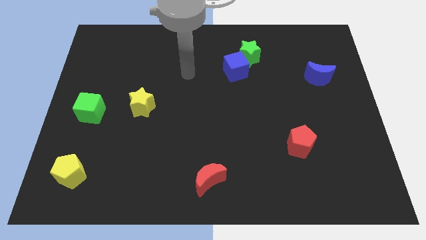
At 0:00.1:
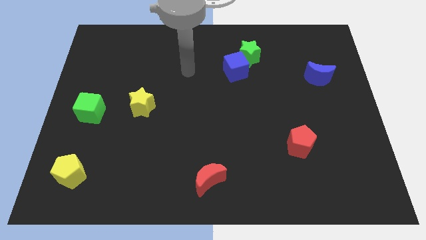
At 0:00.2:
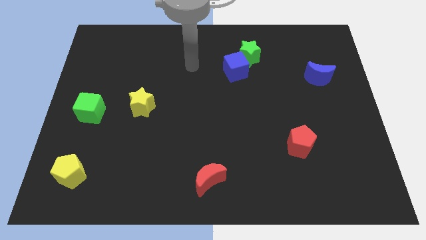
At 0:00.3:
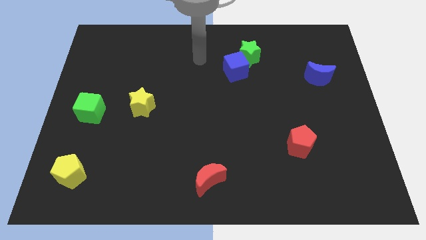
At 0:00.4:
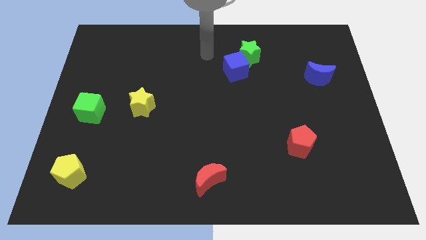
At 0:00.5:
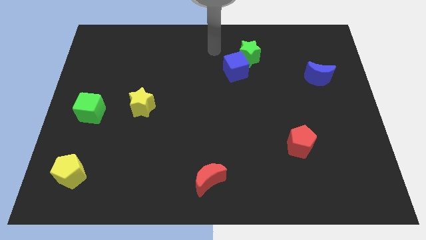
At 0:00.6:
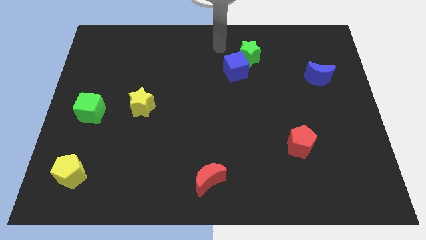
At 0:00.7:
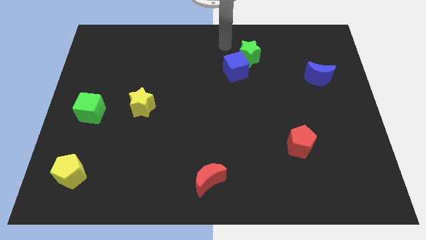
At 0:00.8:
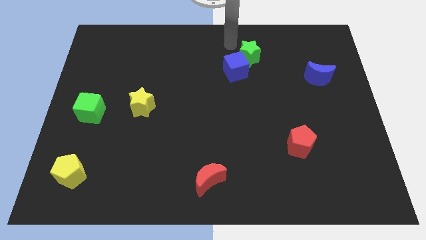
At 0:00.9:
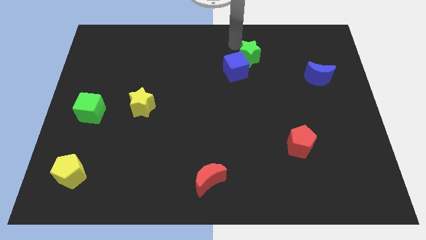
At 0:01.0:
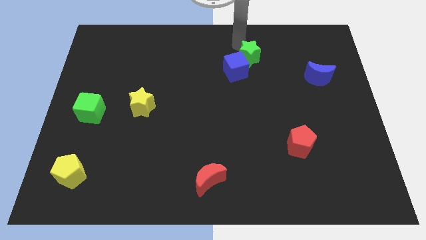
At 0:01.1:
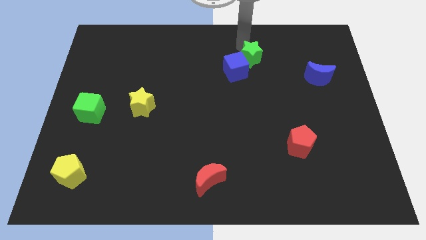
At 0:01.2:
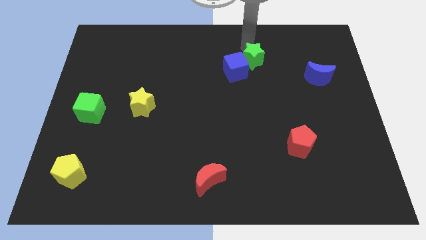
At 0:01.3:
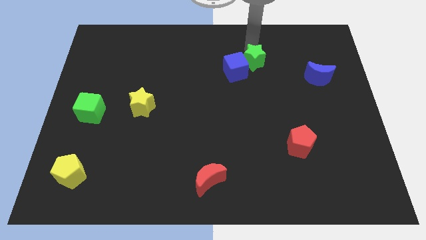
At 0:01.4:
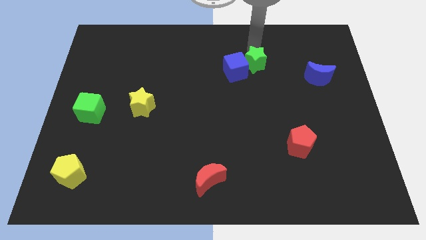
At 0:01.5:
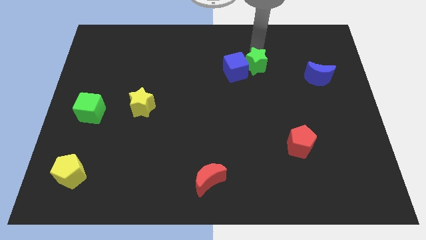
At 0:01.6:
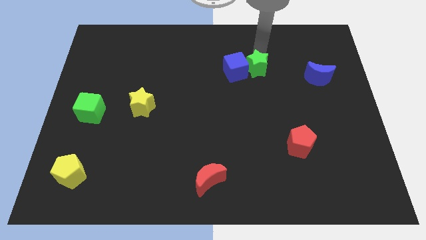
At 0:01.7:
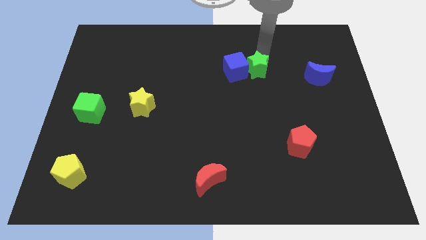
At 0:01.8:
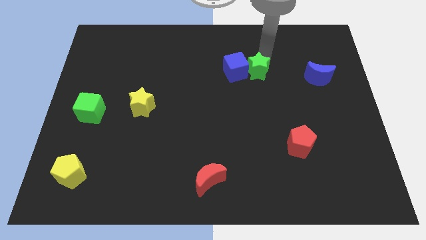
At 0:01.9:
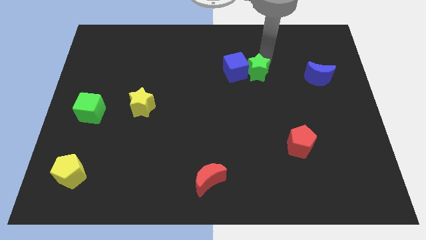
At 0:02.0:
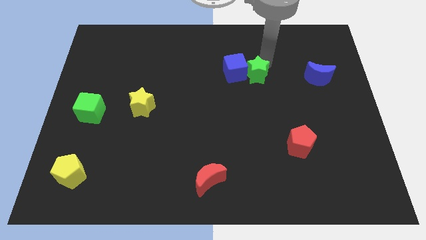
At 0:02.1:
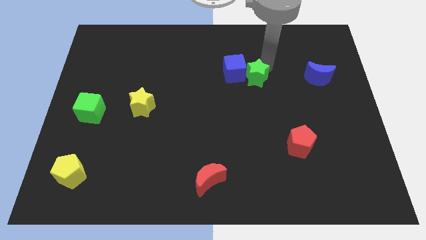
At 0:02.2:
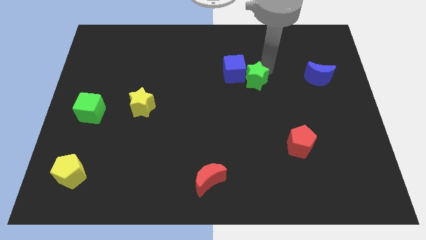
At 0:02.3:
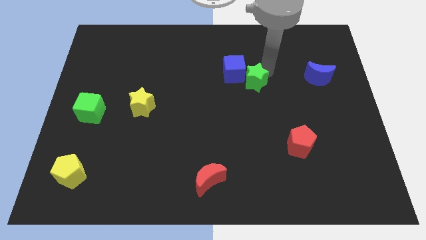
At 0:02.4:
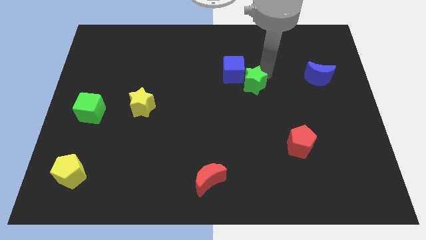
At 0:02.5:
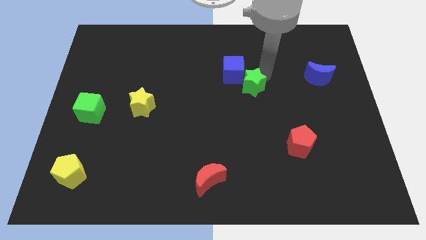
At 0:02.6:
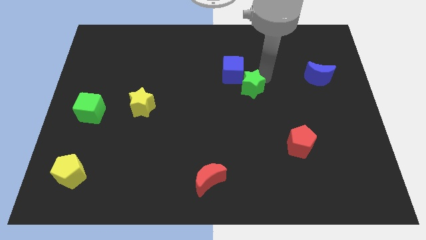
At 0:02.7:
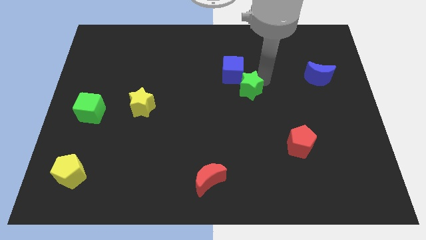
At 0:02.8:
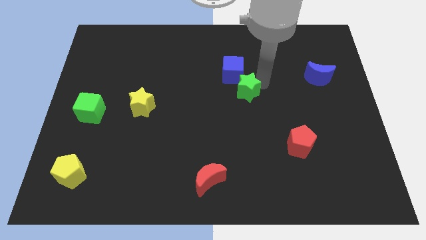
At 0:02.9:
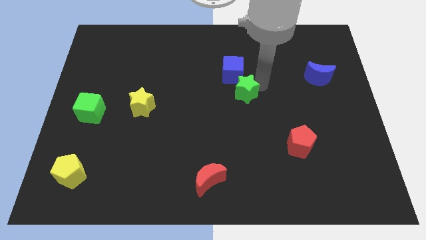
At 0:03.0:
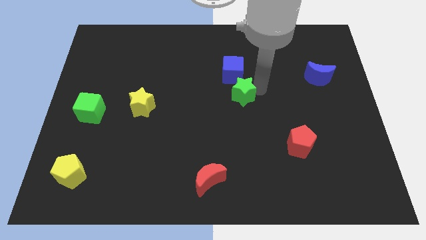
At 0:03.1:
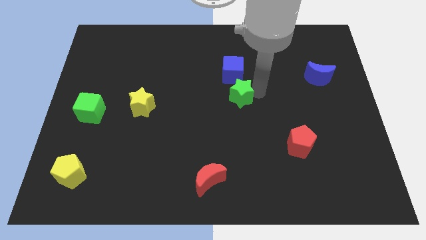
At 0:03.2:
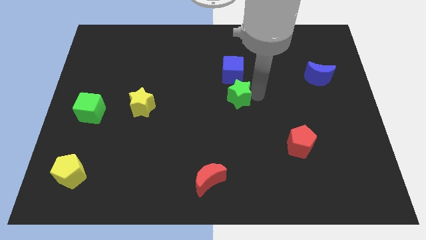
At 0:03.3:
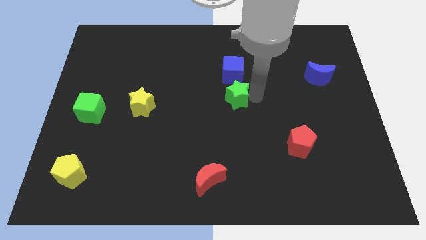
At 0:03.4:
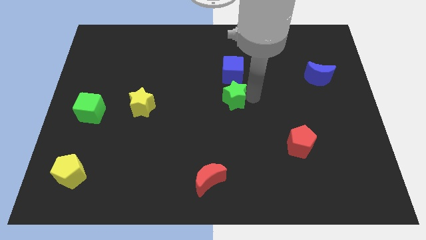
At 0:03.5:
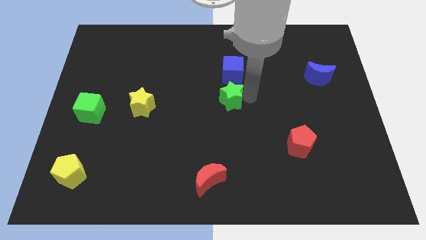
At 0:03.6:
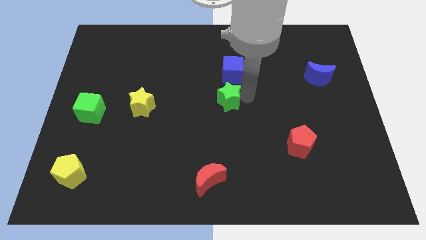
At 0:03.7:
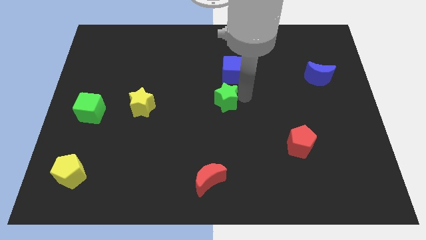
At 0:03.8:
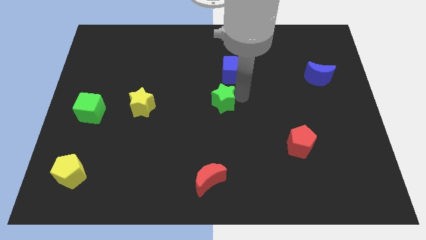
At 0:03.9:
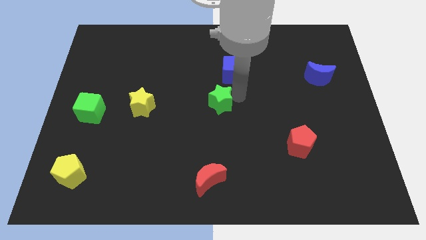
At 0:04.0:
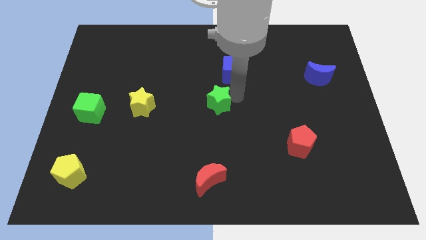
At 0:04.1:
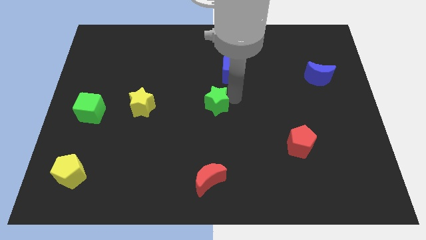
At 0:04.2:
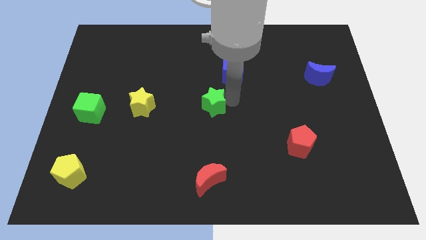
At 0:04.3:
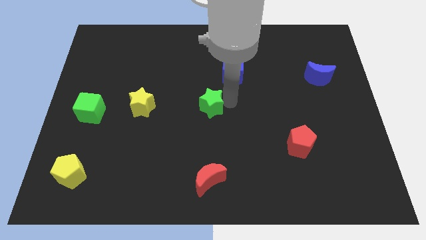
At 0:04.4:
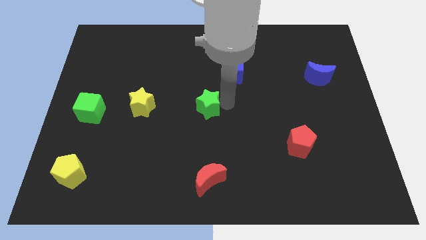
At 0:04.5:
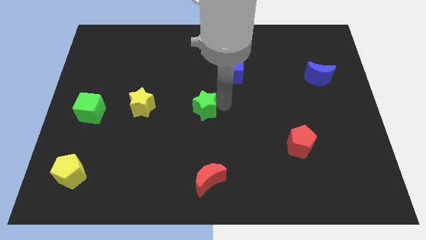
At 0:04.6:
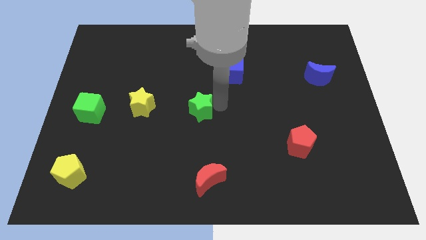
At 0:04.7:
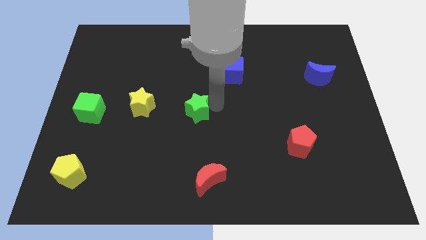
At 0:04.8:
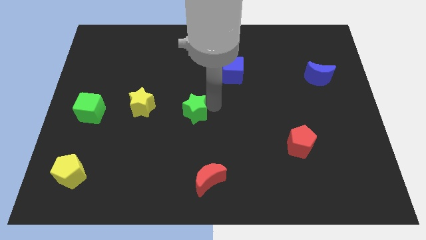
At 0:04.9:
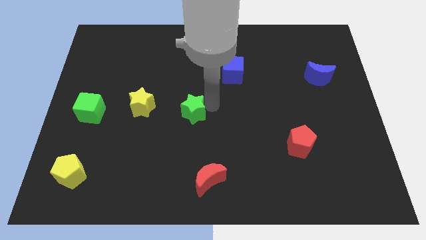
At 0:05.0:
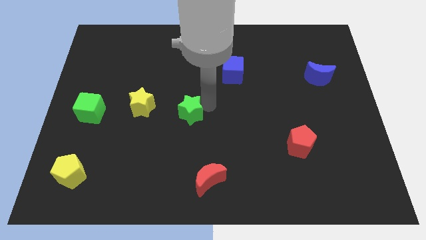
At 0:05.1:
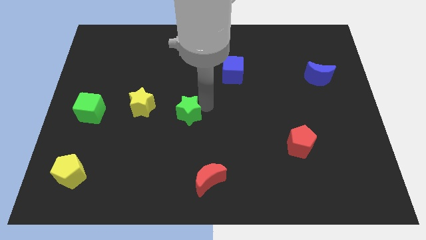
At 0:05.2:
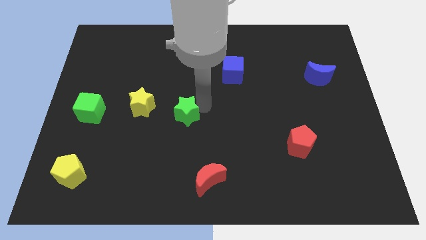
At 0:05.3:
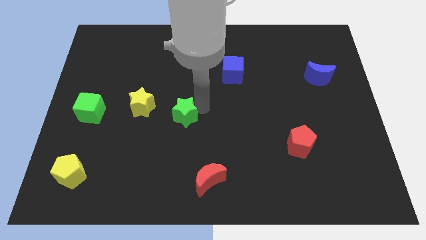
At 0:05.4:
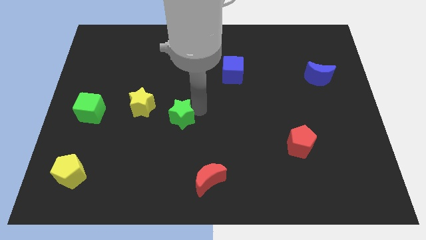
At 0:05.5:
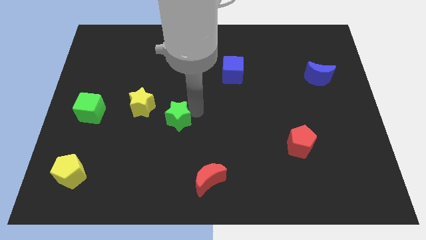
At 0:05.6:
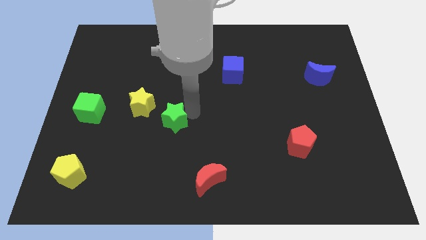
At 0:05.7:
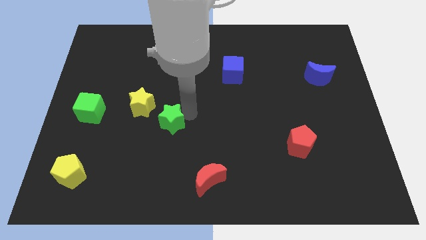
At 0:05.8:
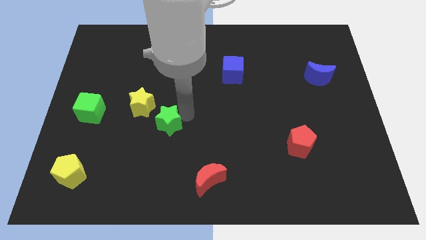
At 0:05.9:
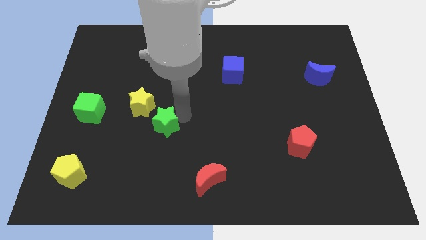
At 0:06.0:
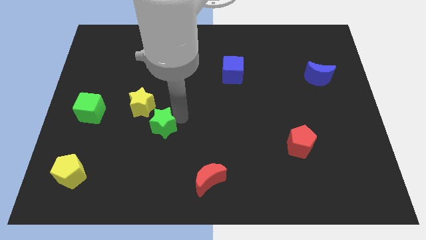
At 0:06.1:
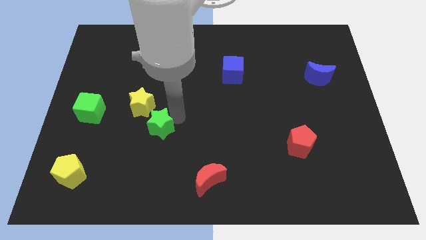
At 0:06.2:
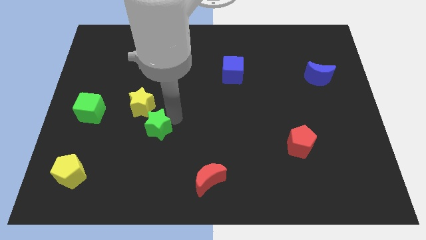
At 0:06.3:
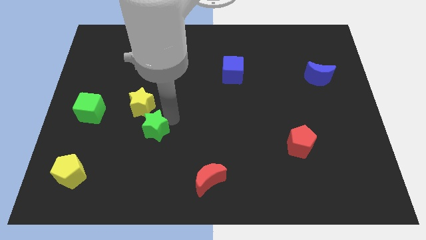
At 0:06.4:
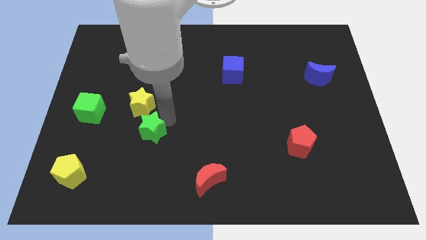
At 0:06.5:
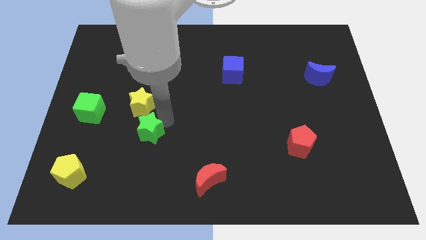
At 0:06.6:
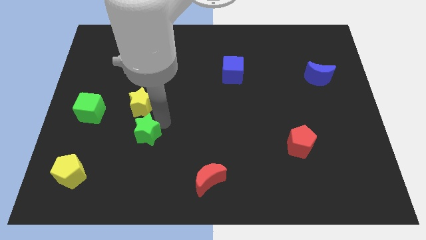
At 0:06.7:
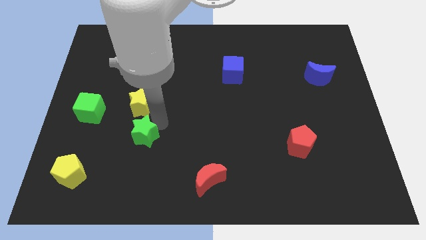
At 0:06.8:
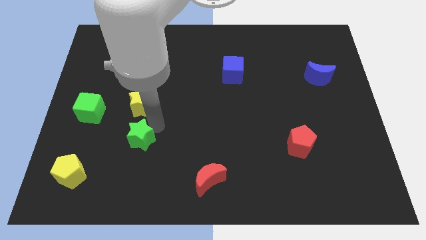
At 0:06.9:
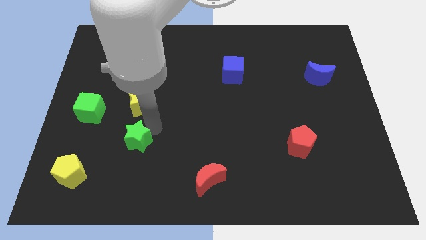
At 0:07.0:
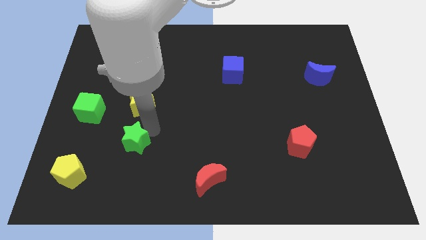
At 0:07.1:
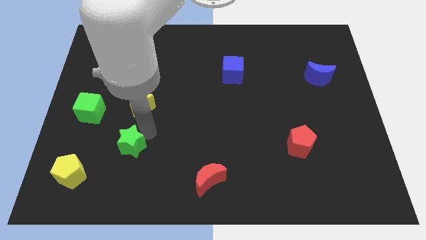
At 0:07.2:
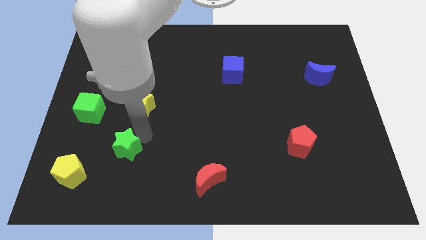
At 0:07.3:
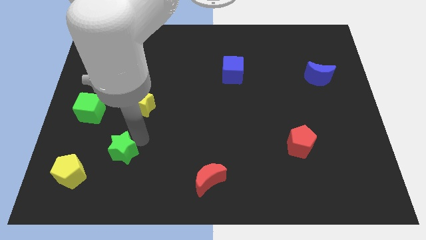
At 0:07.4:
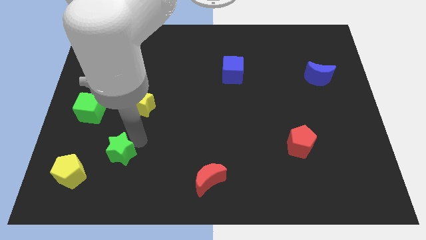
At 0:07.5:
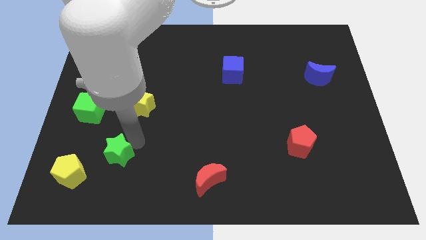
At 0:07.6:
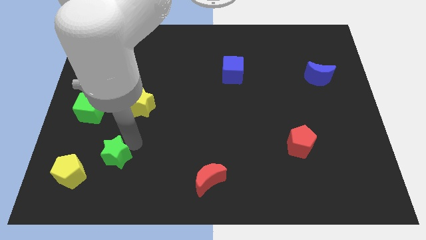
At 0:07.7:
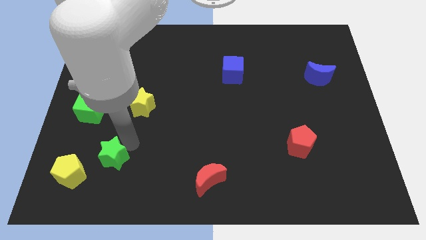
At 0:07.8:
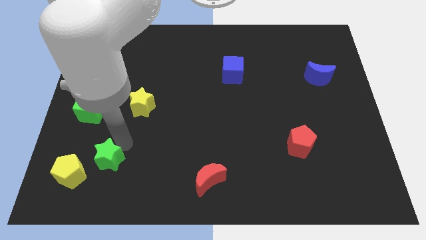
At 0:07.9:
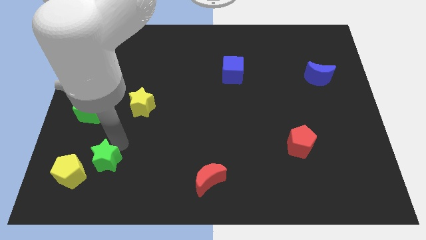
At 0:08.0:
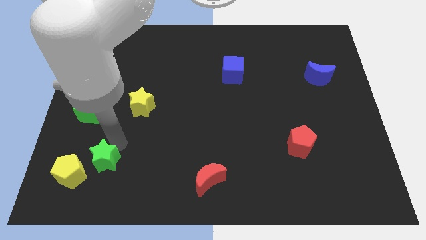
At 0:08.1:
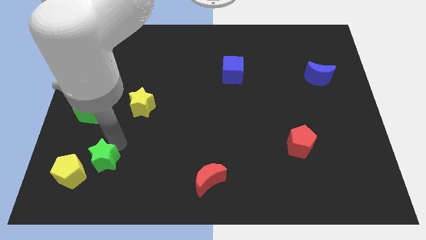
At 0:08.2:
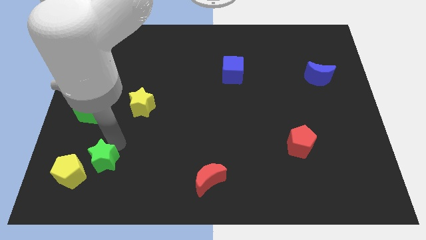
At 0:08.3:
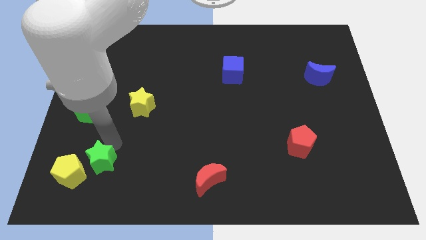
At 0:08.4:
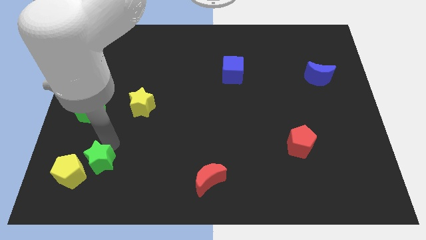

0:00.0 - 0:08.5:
push the green star to the yellow pentagon

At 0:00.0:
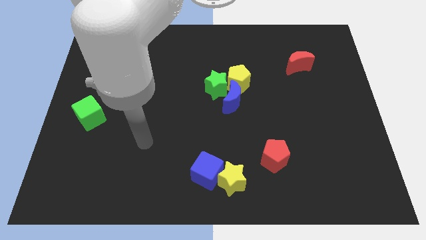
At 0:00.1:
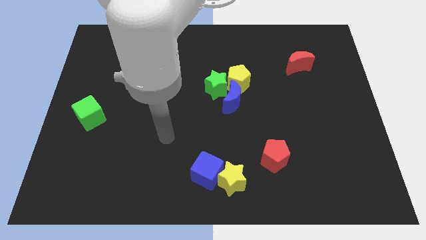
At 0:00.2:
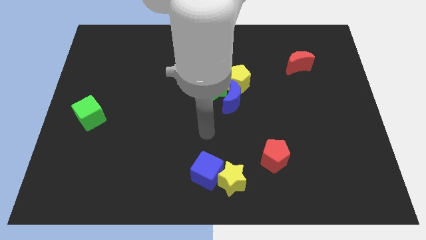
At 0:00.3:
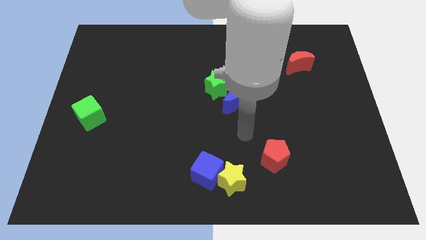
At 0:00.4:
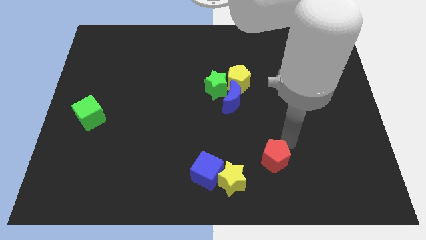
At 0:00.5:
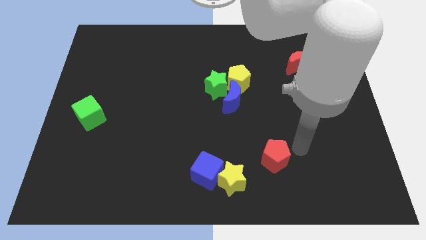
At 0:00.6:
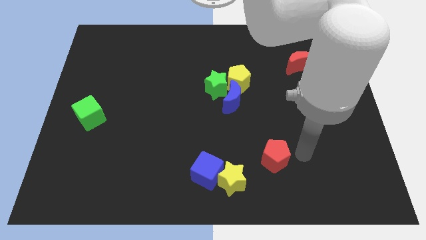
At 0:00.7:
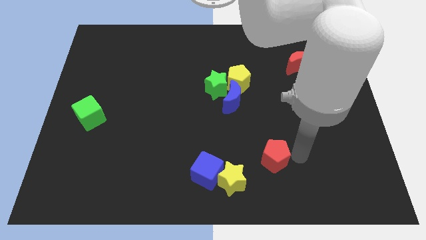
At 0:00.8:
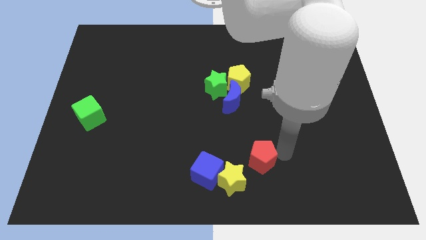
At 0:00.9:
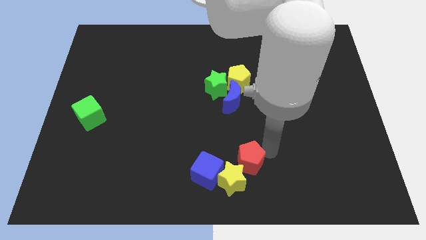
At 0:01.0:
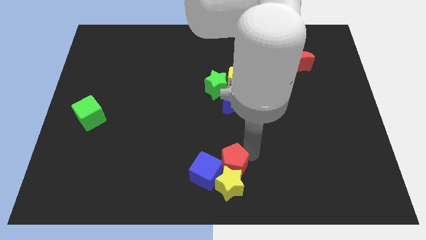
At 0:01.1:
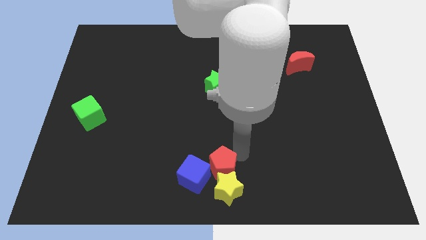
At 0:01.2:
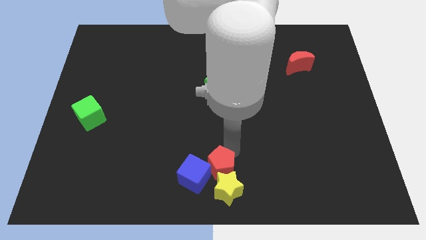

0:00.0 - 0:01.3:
put the red pentagon towards the blue cube
